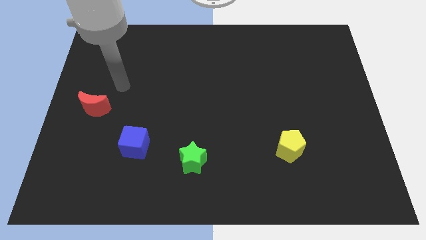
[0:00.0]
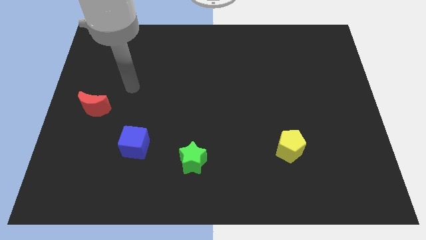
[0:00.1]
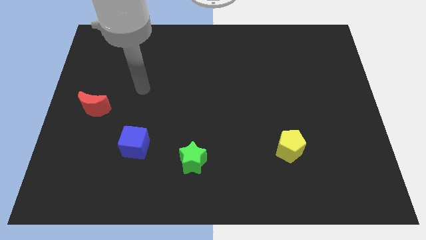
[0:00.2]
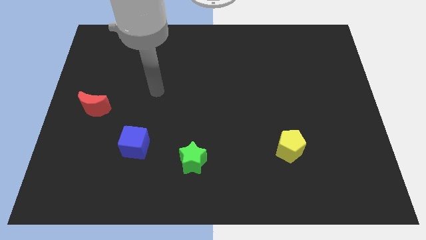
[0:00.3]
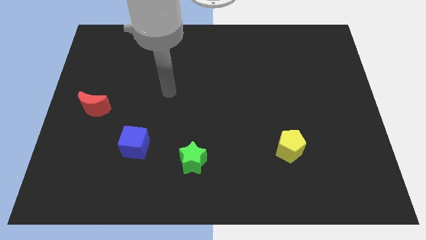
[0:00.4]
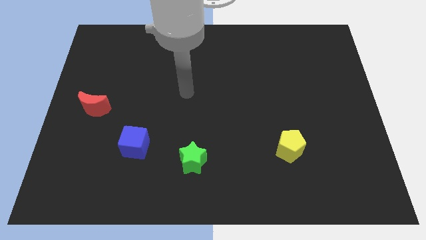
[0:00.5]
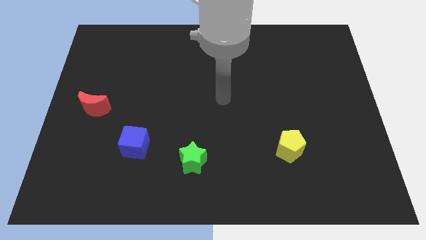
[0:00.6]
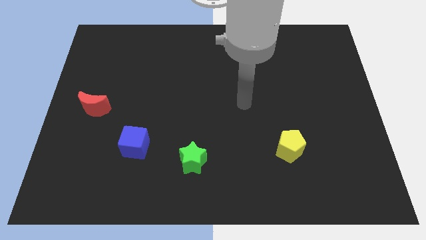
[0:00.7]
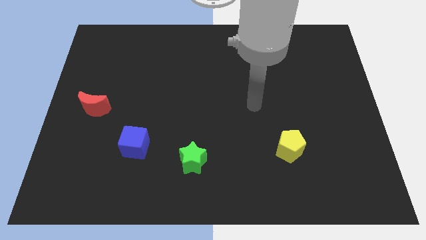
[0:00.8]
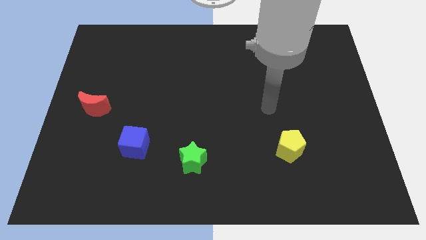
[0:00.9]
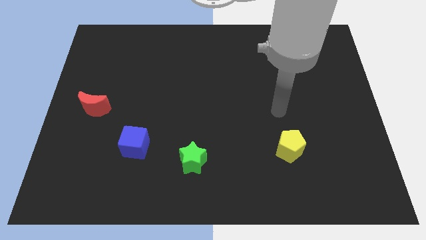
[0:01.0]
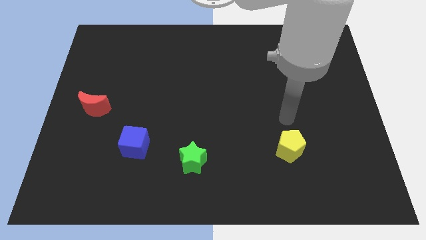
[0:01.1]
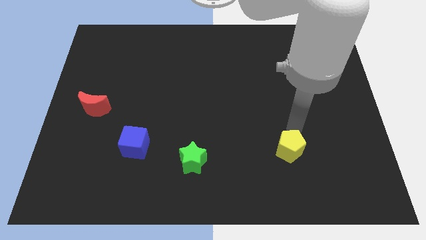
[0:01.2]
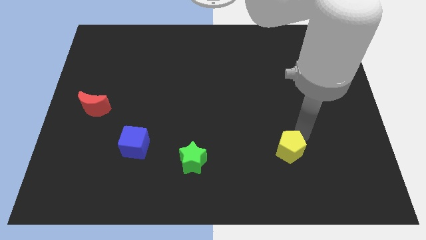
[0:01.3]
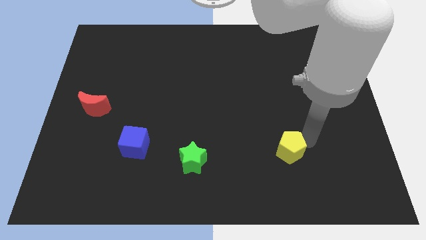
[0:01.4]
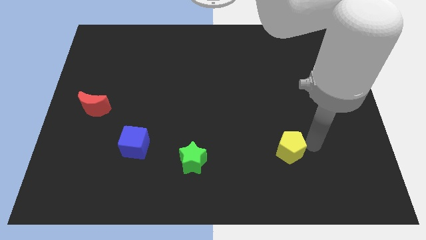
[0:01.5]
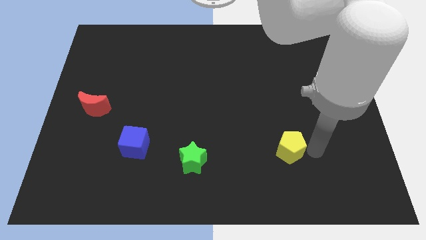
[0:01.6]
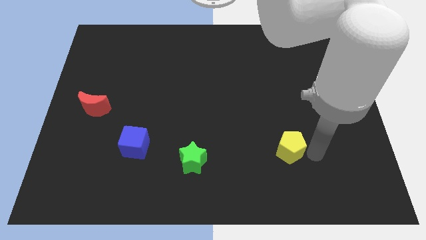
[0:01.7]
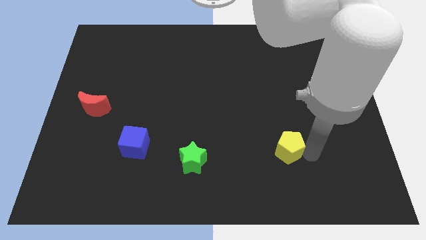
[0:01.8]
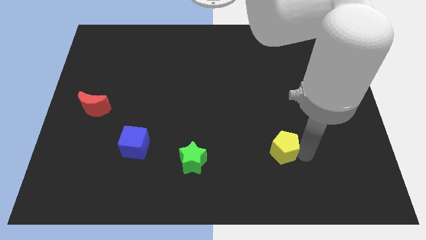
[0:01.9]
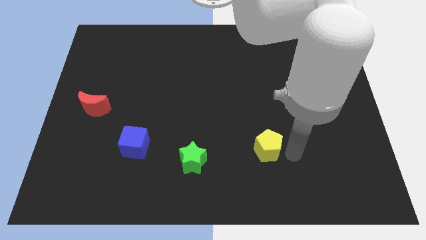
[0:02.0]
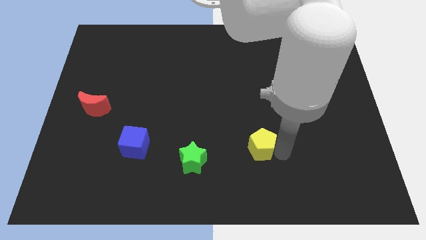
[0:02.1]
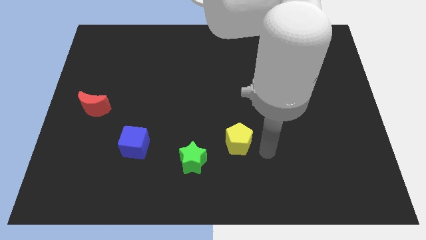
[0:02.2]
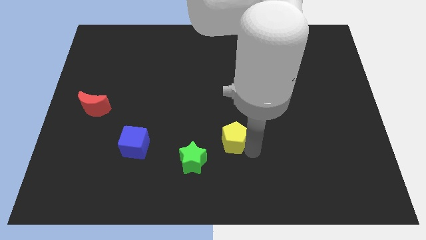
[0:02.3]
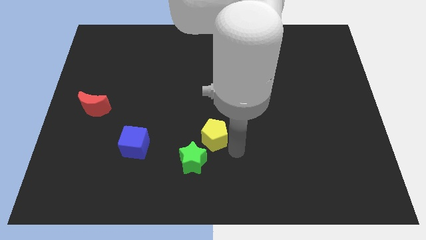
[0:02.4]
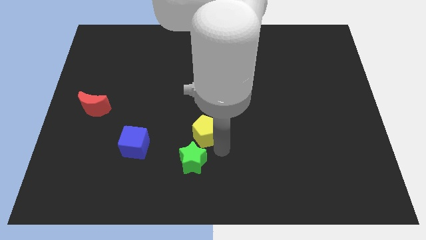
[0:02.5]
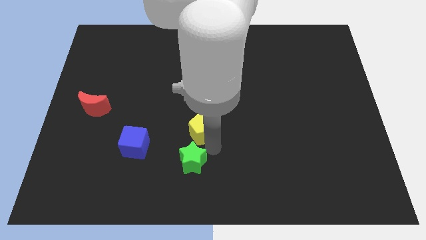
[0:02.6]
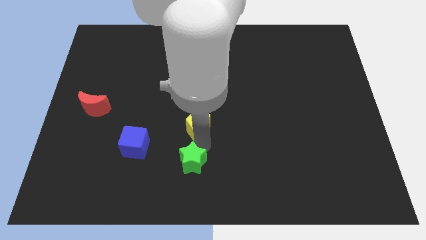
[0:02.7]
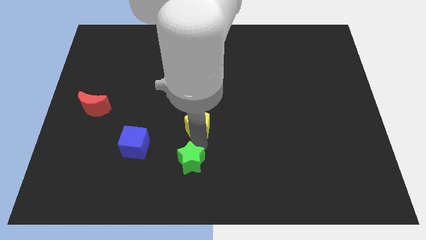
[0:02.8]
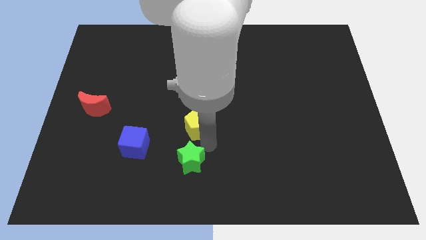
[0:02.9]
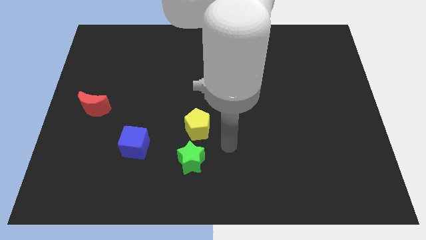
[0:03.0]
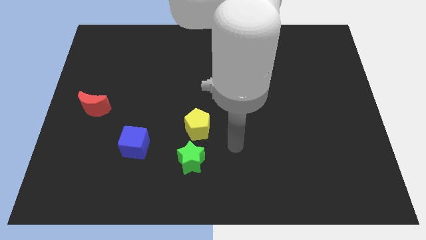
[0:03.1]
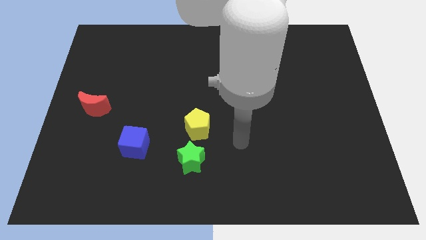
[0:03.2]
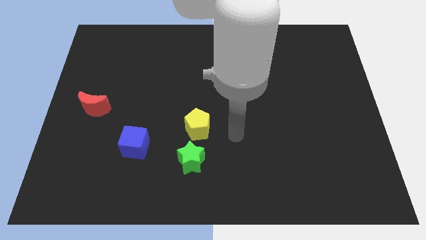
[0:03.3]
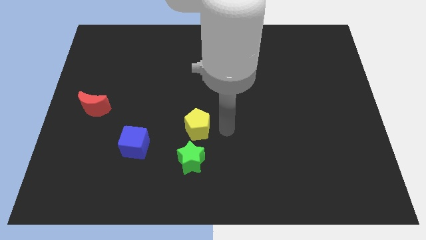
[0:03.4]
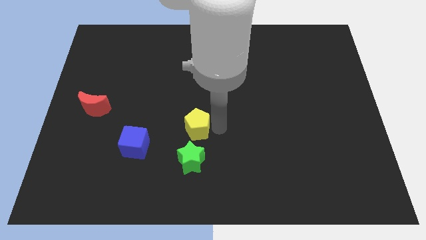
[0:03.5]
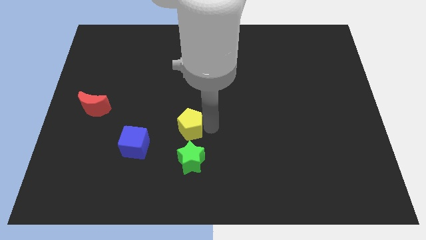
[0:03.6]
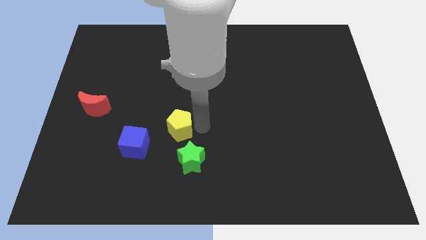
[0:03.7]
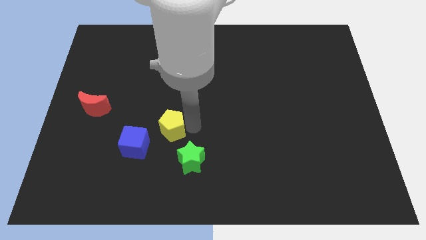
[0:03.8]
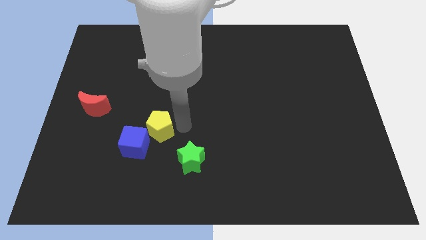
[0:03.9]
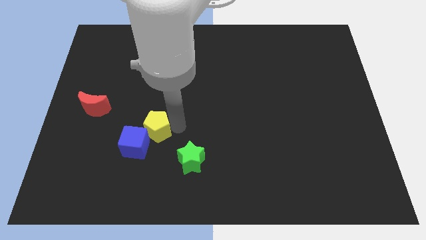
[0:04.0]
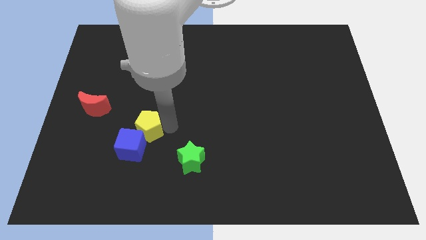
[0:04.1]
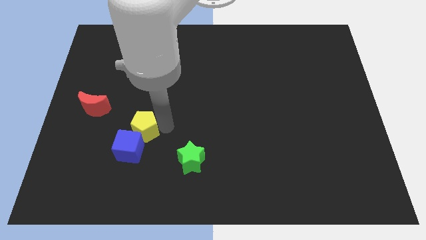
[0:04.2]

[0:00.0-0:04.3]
slide the yellow pentagon close to the cube

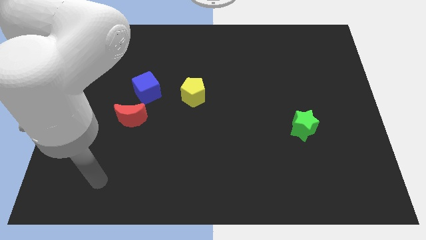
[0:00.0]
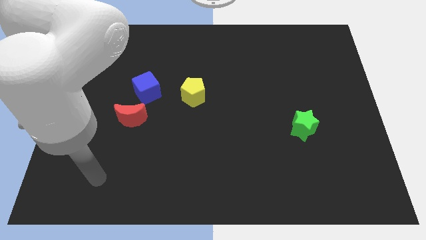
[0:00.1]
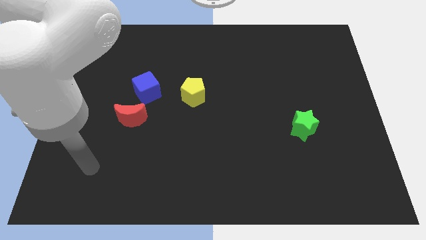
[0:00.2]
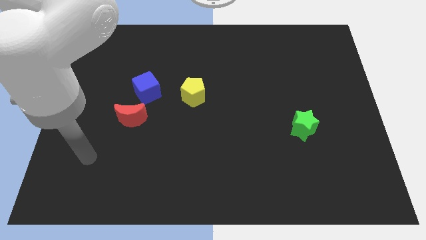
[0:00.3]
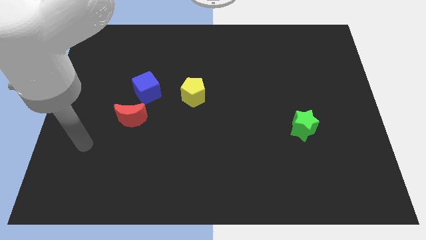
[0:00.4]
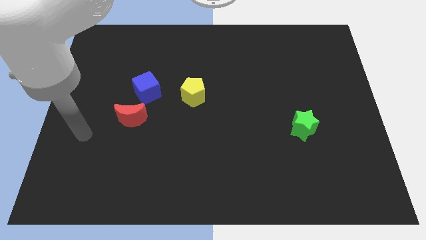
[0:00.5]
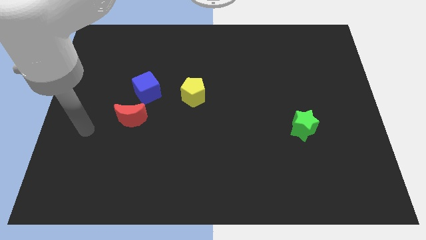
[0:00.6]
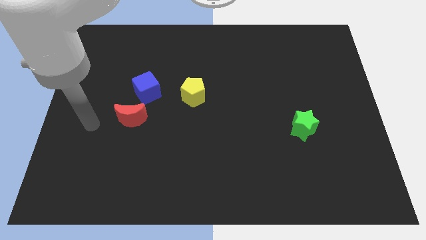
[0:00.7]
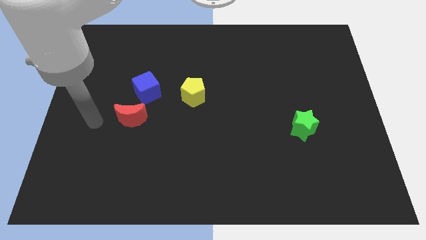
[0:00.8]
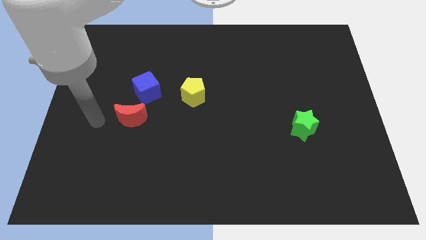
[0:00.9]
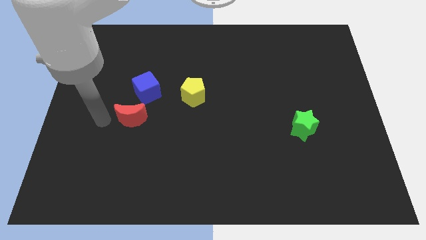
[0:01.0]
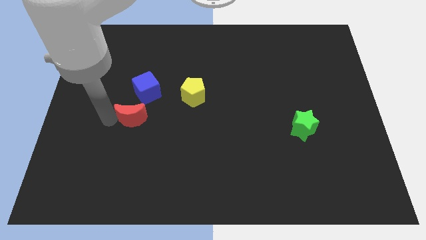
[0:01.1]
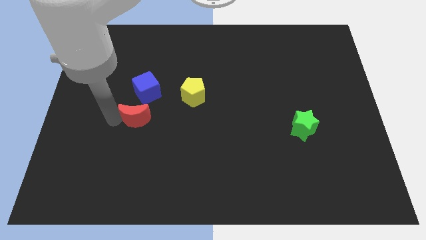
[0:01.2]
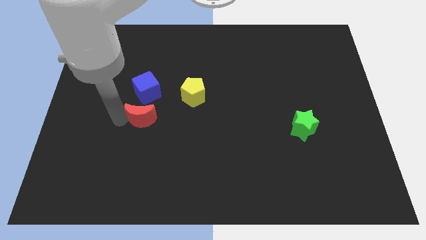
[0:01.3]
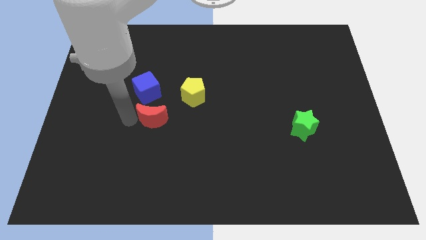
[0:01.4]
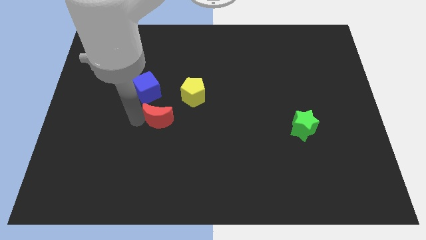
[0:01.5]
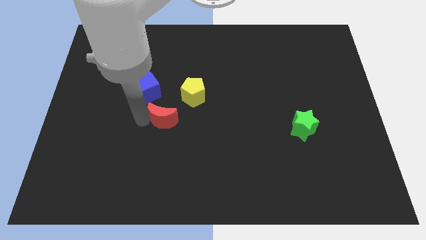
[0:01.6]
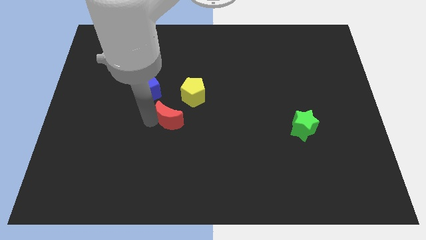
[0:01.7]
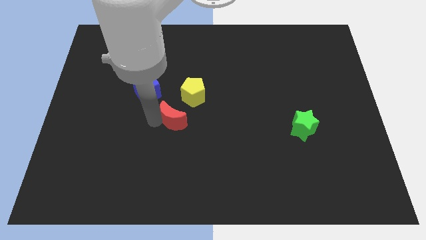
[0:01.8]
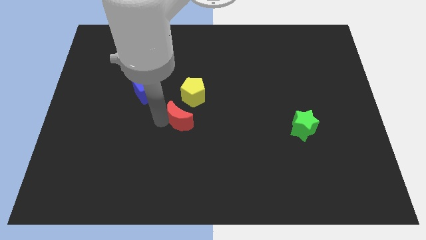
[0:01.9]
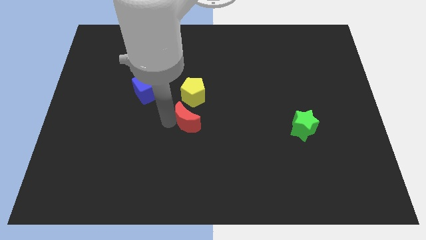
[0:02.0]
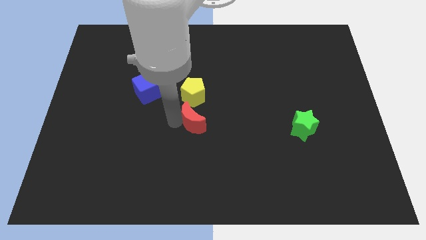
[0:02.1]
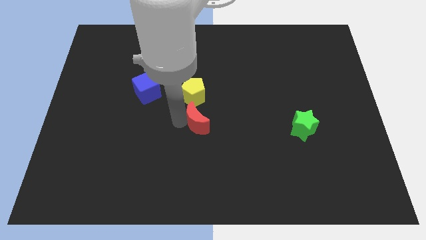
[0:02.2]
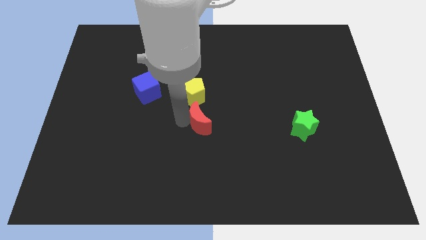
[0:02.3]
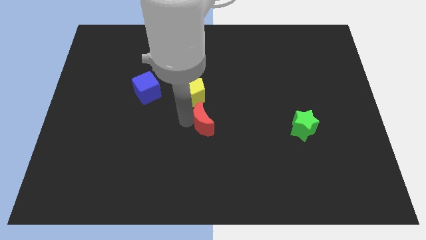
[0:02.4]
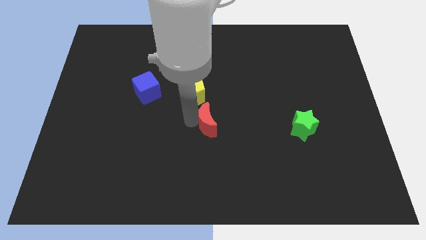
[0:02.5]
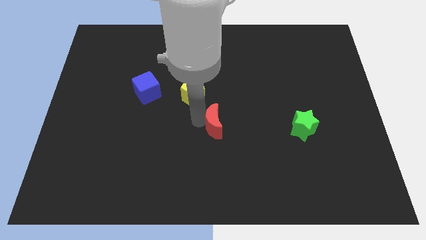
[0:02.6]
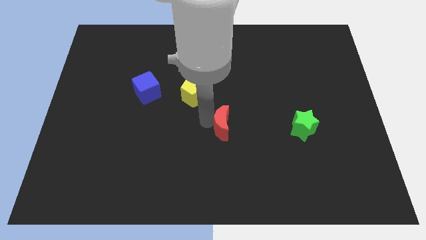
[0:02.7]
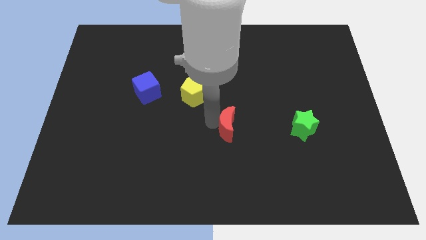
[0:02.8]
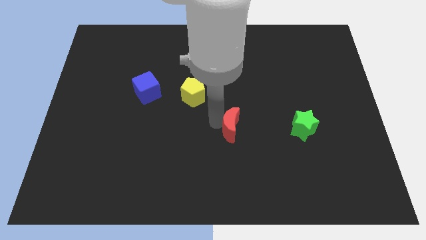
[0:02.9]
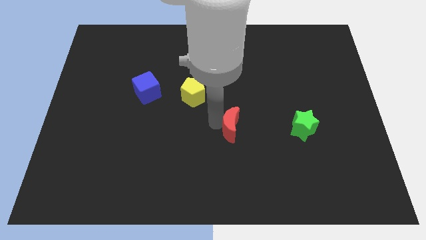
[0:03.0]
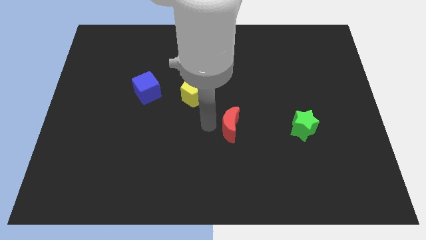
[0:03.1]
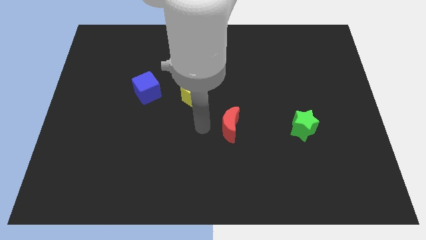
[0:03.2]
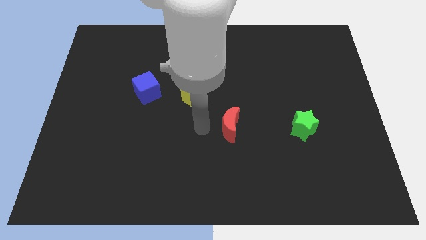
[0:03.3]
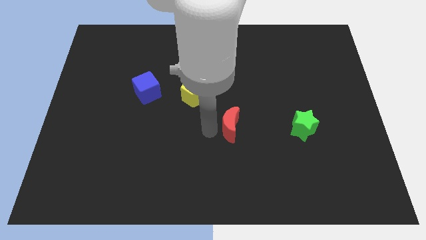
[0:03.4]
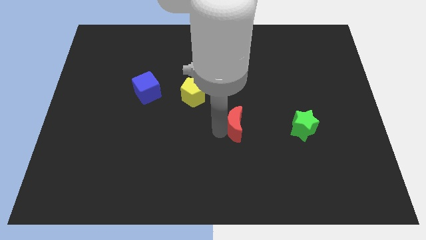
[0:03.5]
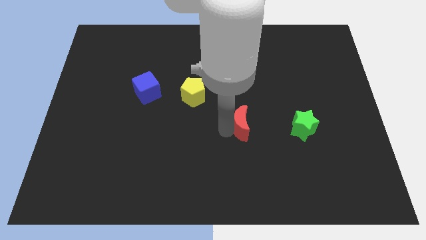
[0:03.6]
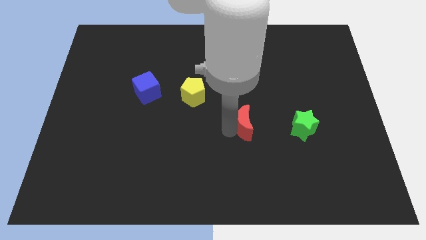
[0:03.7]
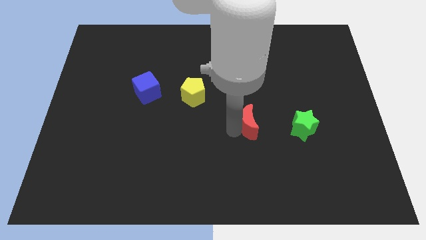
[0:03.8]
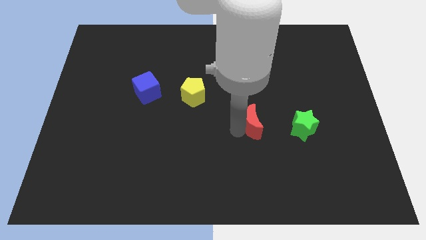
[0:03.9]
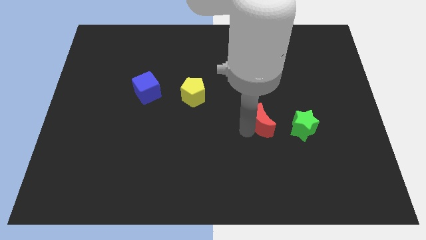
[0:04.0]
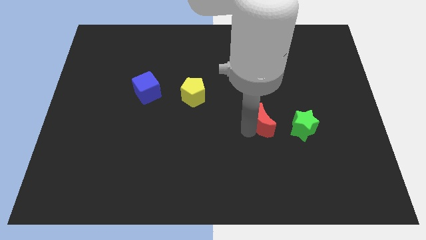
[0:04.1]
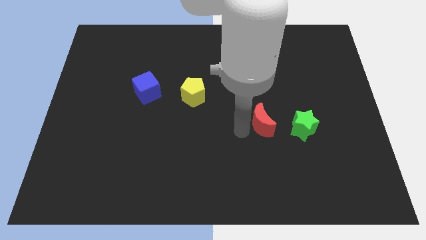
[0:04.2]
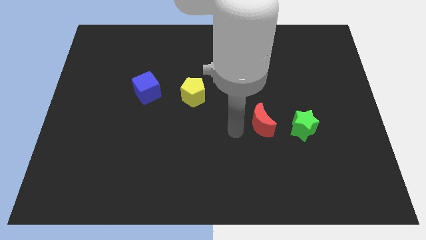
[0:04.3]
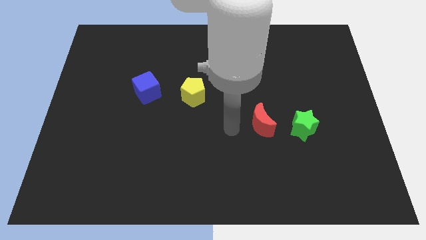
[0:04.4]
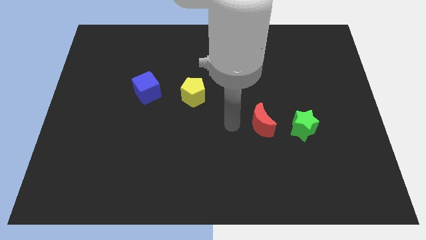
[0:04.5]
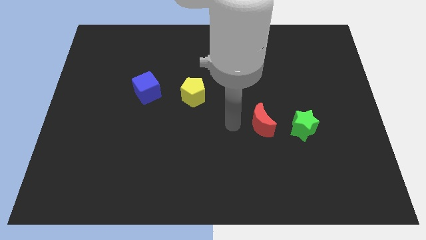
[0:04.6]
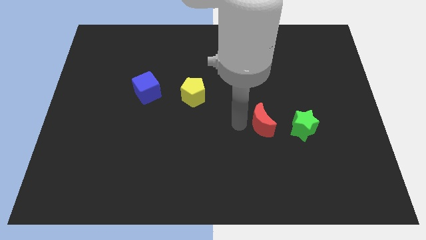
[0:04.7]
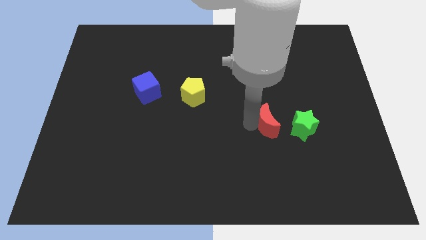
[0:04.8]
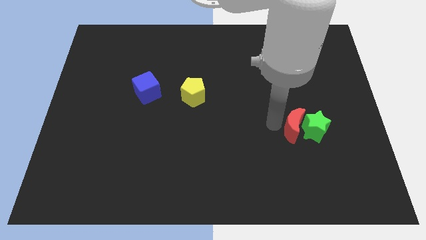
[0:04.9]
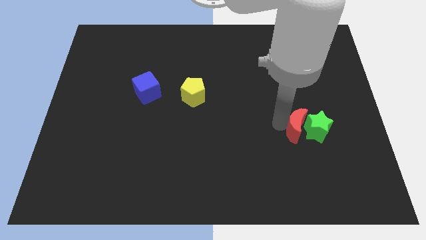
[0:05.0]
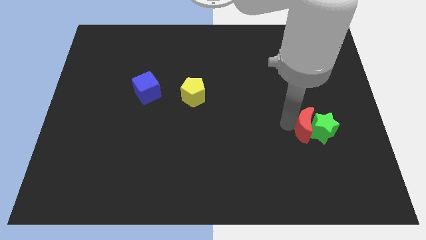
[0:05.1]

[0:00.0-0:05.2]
slide the moon close to the green star
